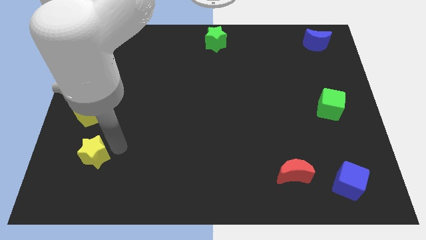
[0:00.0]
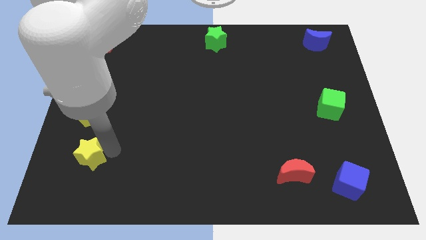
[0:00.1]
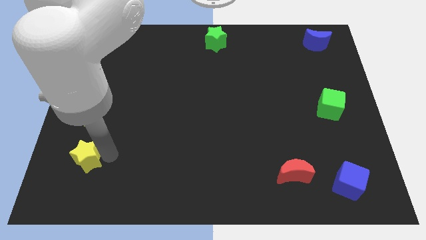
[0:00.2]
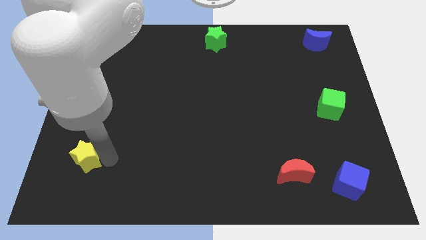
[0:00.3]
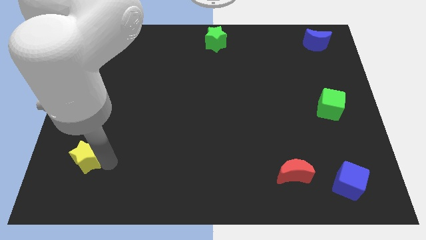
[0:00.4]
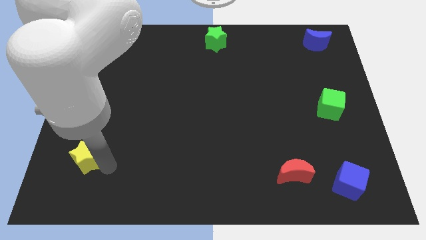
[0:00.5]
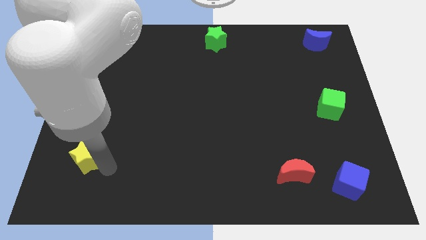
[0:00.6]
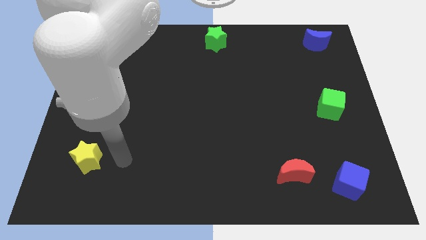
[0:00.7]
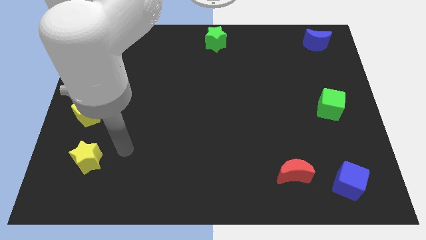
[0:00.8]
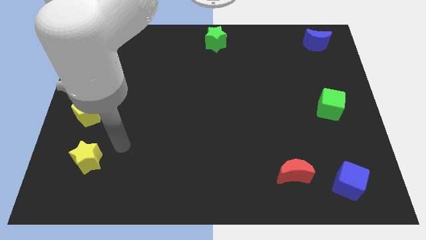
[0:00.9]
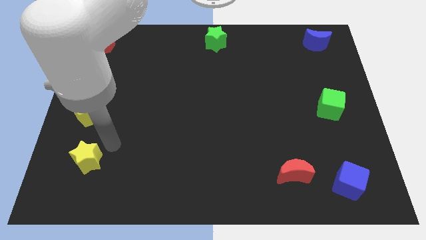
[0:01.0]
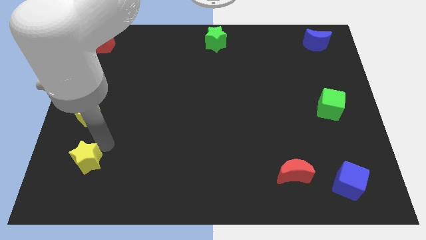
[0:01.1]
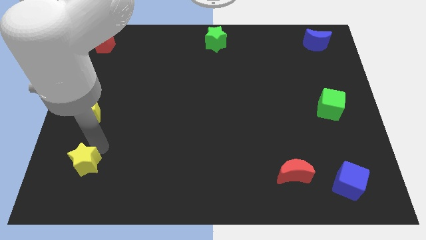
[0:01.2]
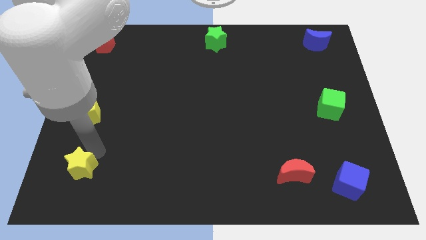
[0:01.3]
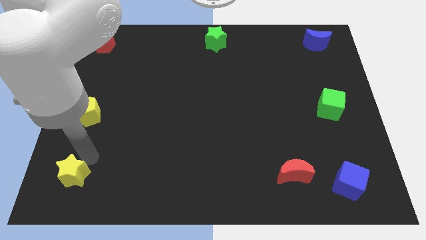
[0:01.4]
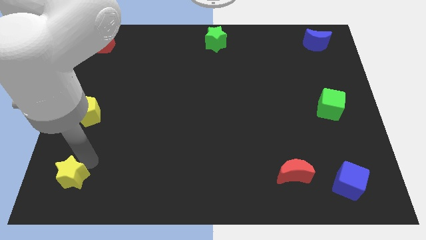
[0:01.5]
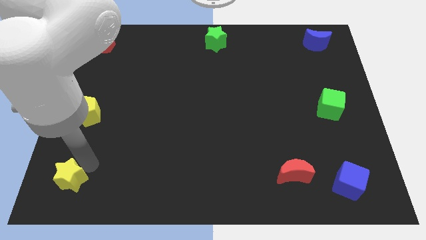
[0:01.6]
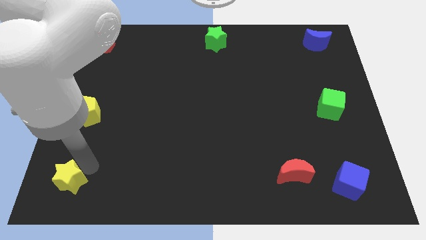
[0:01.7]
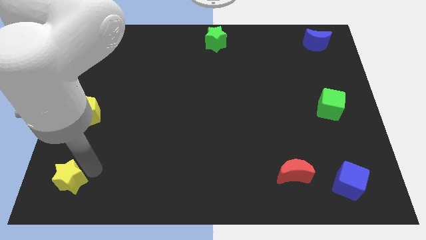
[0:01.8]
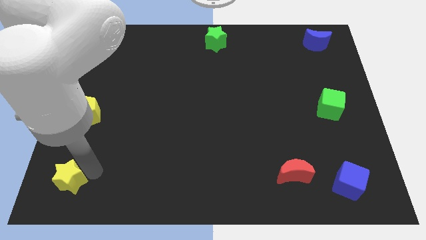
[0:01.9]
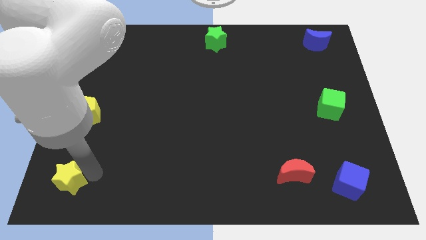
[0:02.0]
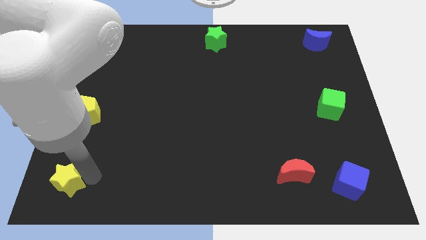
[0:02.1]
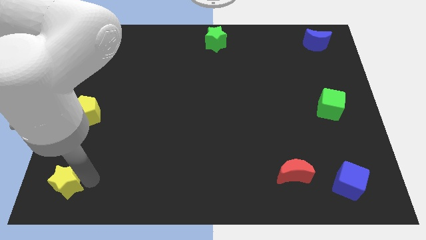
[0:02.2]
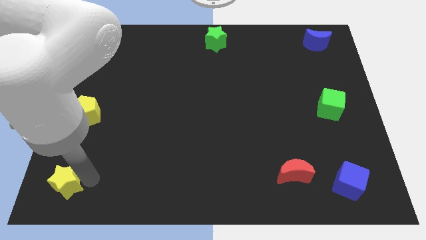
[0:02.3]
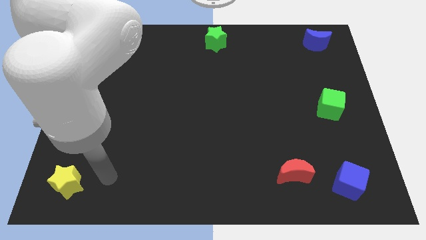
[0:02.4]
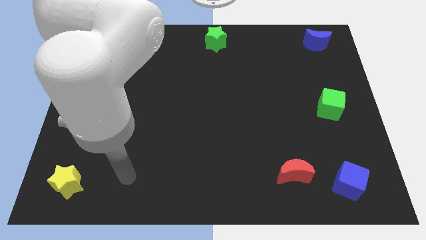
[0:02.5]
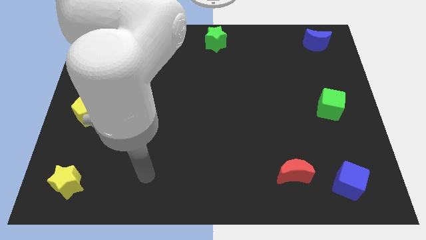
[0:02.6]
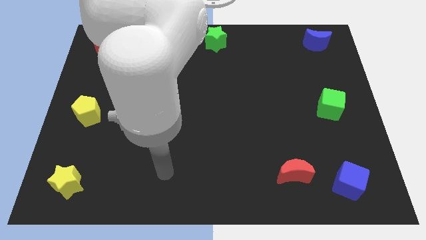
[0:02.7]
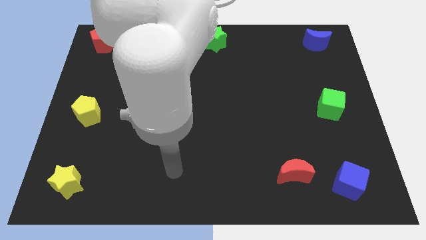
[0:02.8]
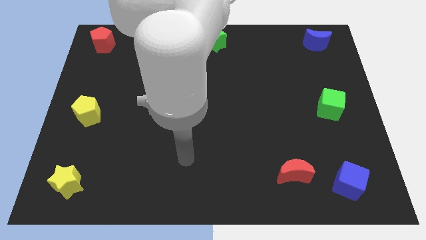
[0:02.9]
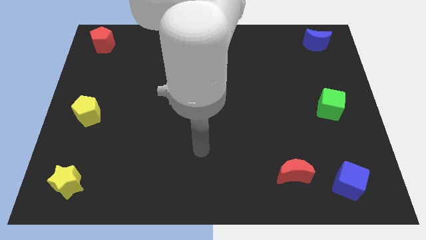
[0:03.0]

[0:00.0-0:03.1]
push yellow star towards bottom left side of the board

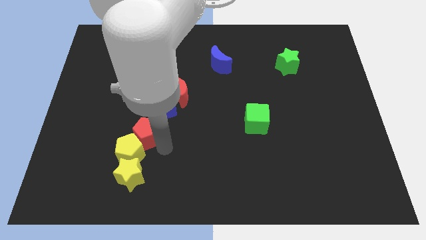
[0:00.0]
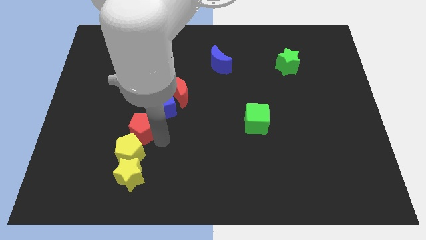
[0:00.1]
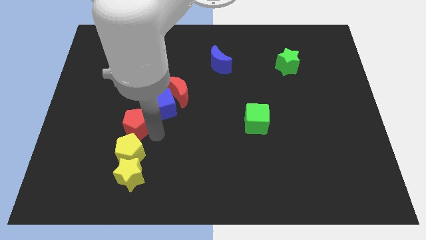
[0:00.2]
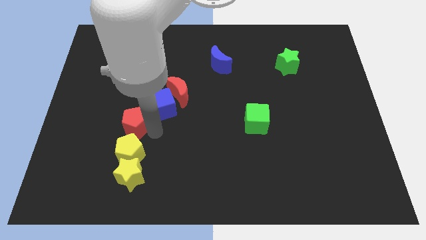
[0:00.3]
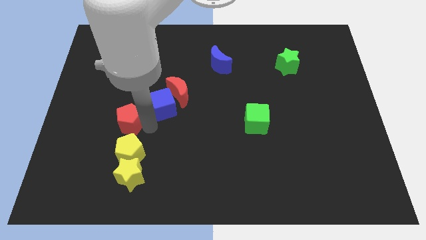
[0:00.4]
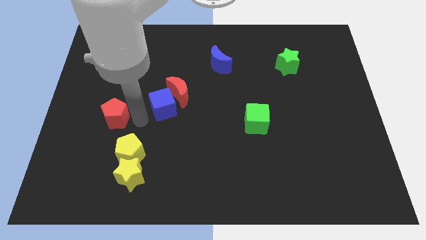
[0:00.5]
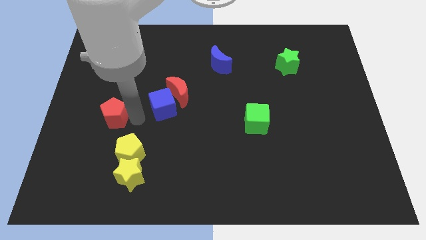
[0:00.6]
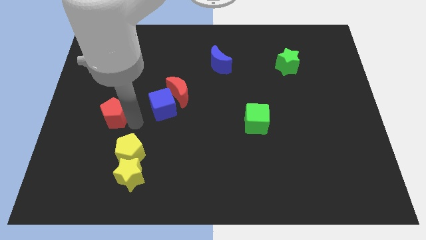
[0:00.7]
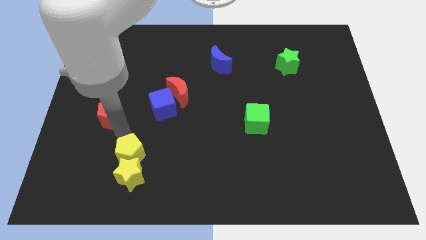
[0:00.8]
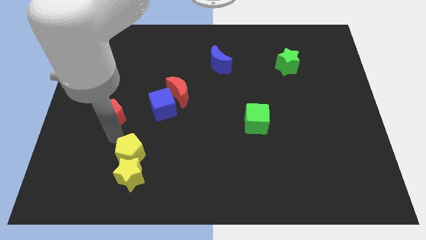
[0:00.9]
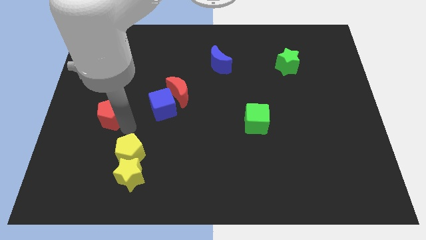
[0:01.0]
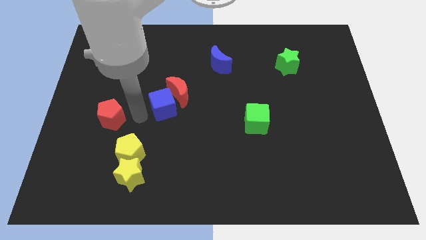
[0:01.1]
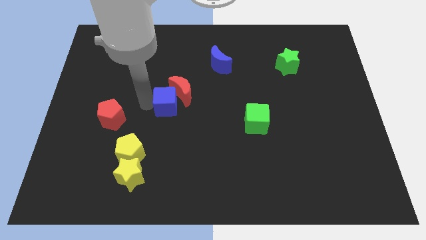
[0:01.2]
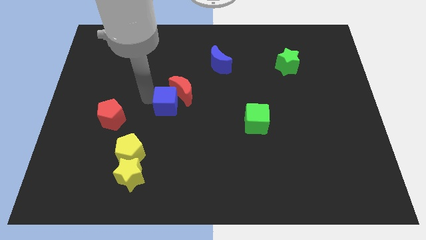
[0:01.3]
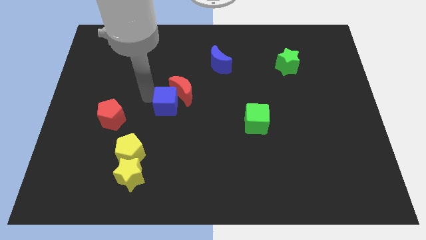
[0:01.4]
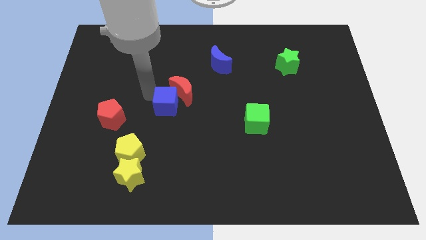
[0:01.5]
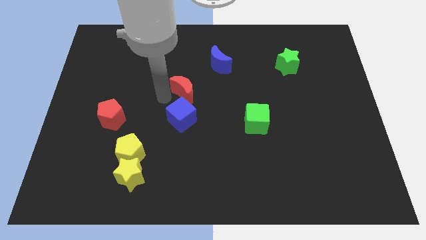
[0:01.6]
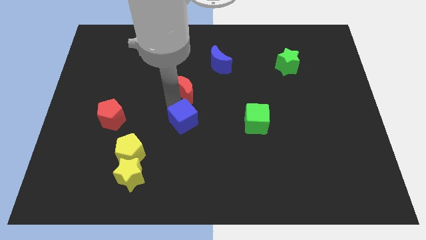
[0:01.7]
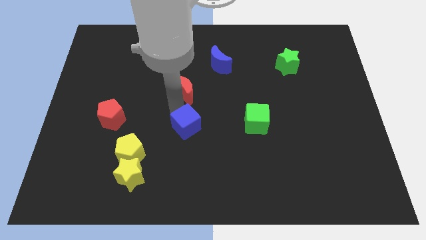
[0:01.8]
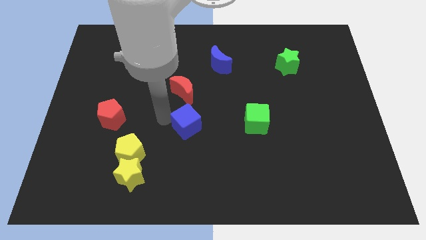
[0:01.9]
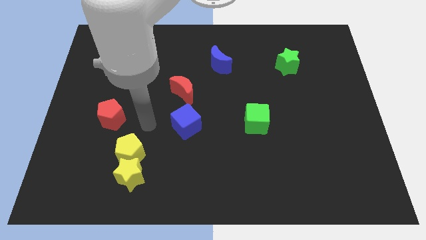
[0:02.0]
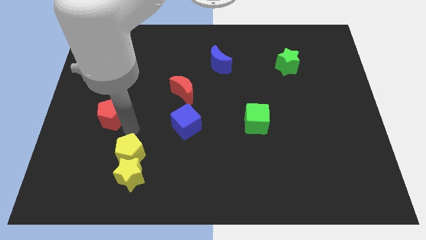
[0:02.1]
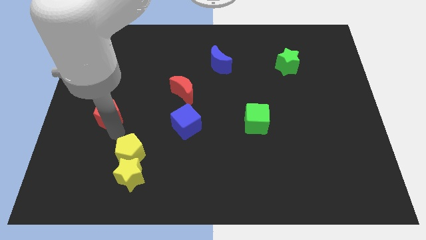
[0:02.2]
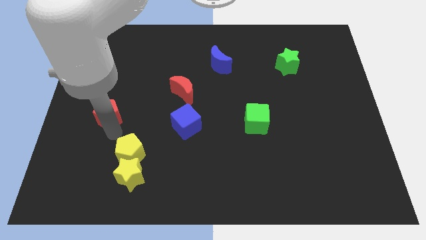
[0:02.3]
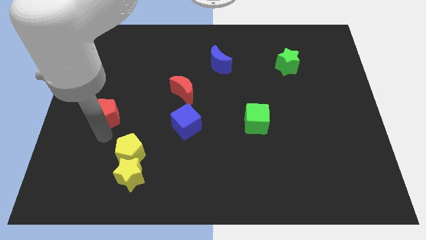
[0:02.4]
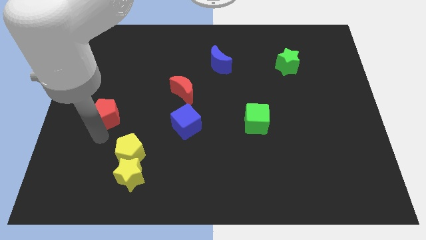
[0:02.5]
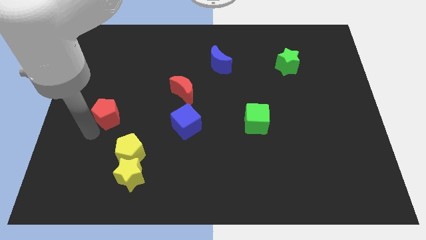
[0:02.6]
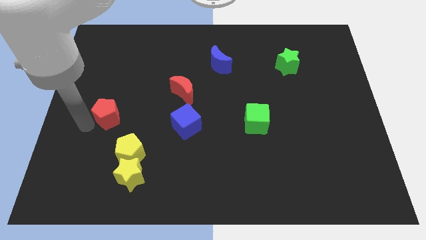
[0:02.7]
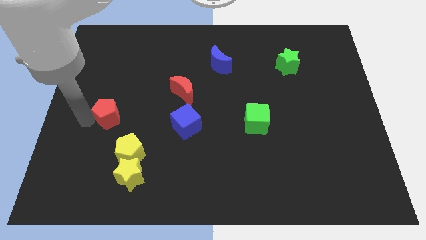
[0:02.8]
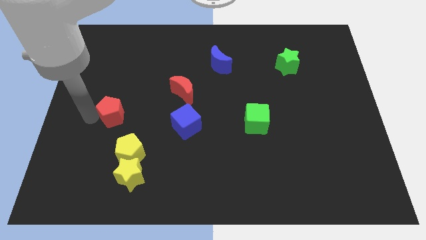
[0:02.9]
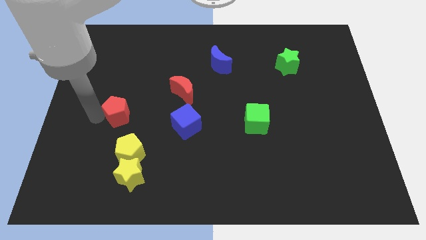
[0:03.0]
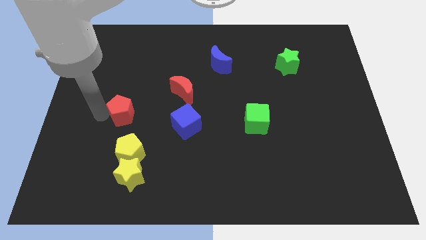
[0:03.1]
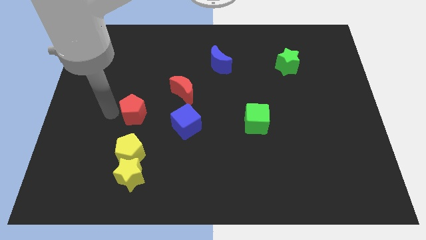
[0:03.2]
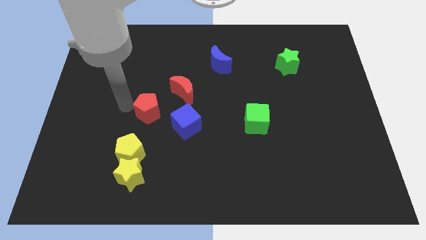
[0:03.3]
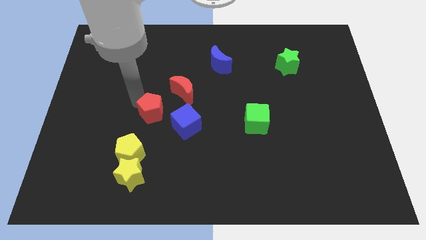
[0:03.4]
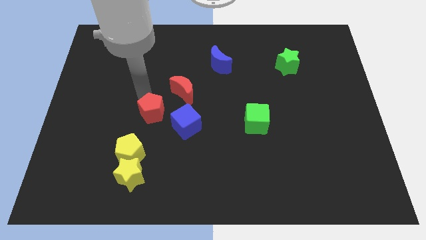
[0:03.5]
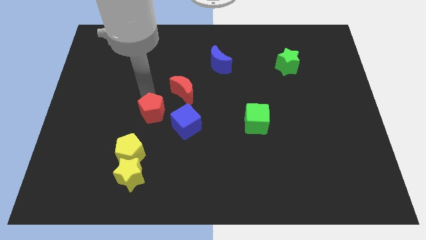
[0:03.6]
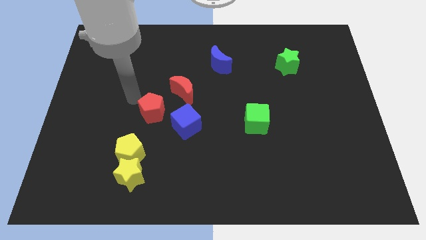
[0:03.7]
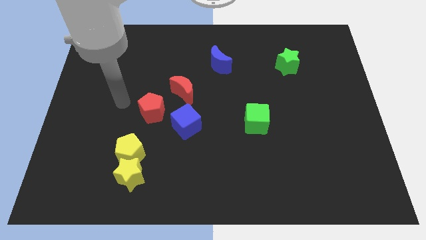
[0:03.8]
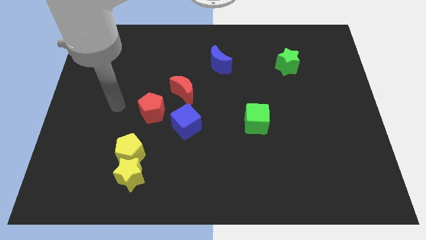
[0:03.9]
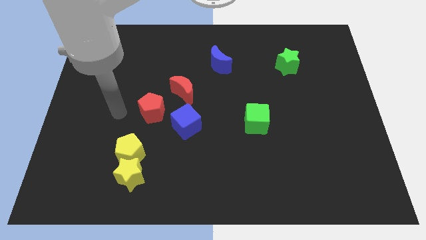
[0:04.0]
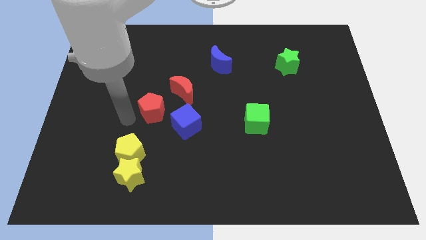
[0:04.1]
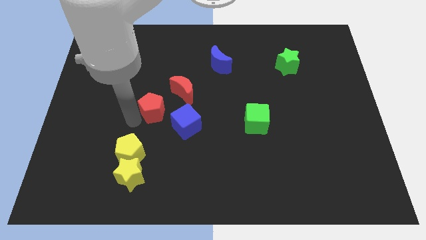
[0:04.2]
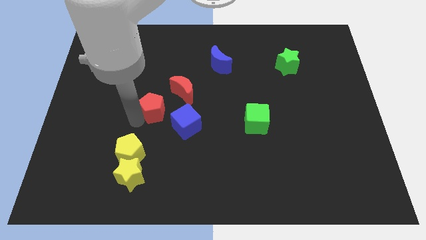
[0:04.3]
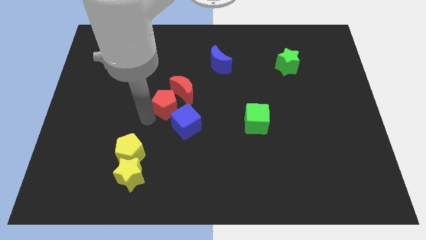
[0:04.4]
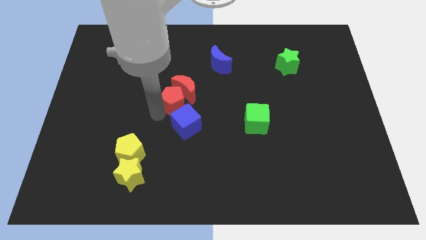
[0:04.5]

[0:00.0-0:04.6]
move the red pentagon and red crescent into the blue cube

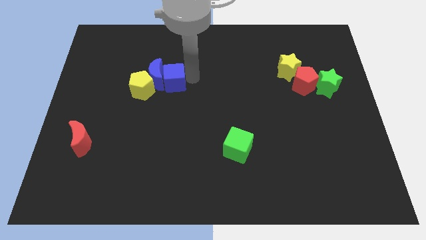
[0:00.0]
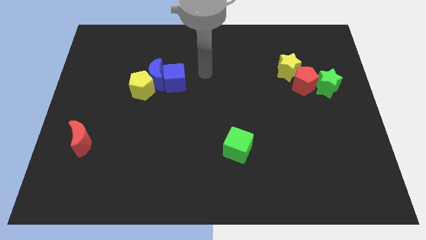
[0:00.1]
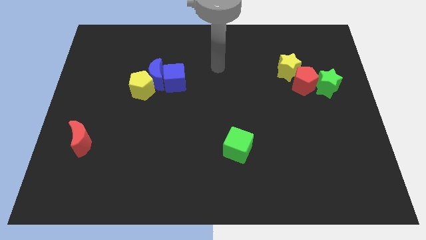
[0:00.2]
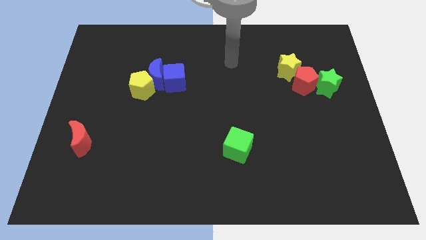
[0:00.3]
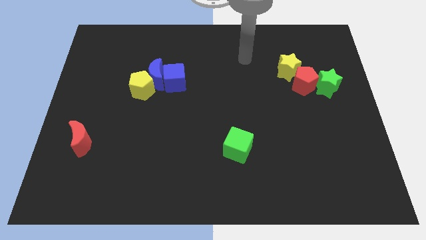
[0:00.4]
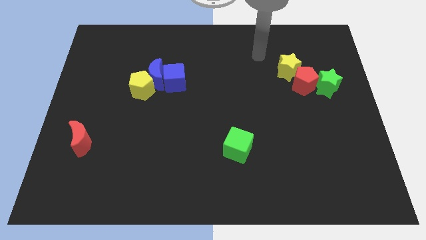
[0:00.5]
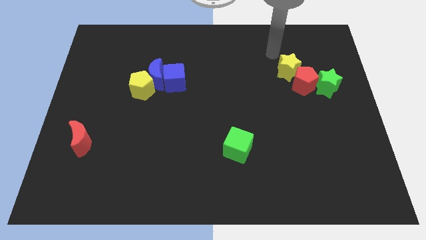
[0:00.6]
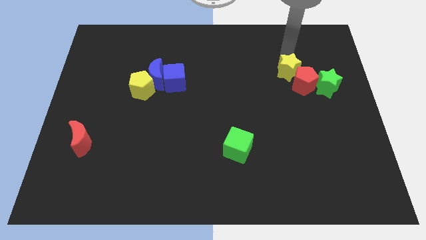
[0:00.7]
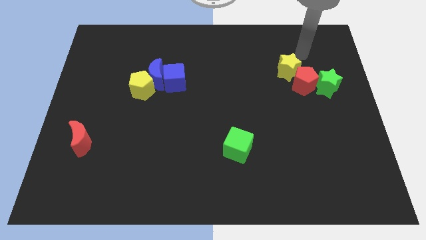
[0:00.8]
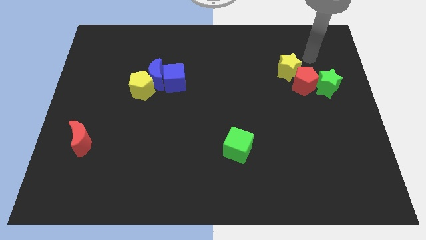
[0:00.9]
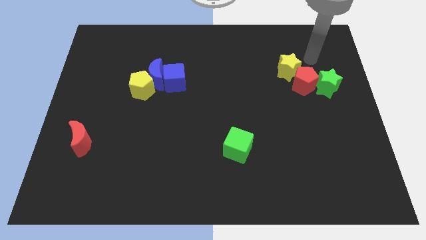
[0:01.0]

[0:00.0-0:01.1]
move the arm away from the blue cube
